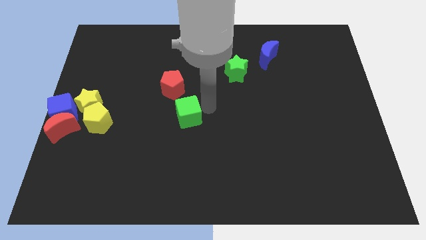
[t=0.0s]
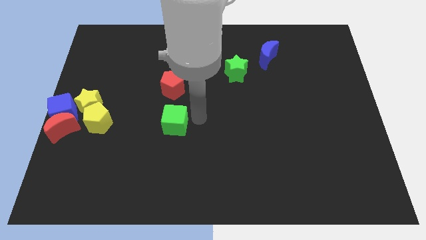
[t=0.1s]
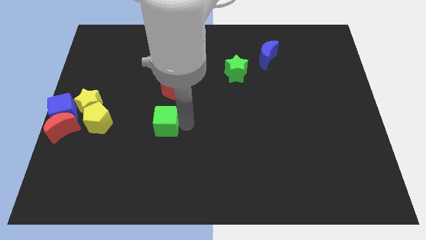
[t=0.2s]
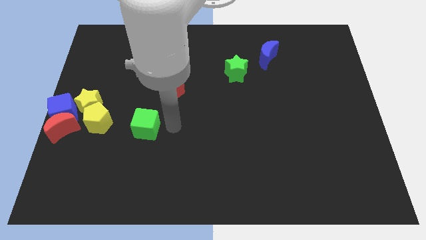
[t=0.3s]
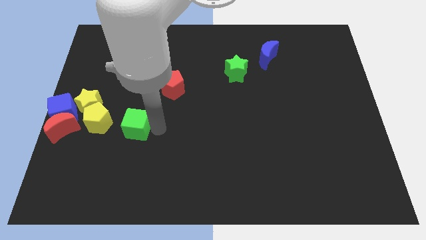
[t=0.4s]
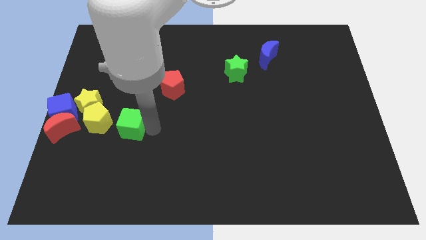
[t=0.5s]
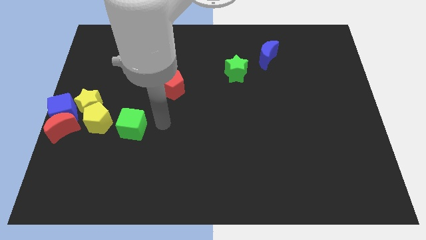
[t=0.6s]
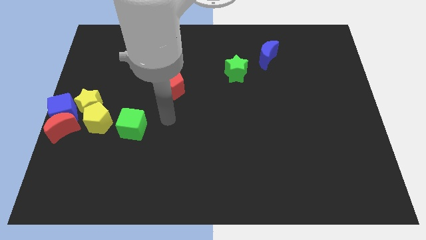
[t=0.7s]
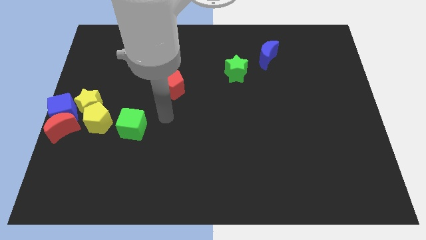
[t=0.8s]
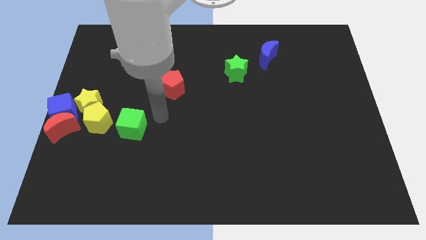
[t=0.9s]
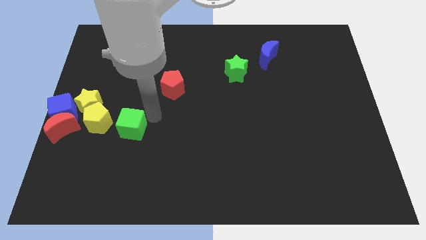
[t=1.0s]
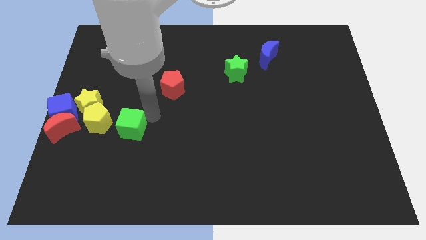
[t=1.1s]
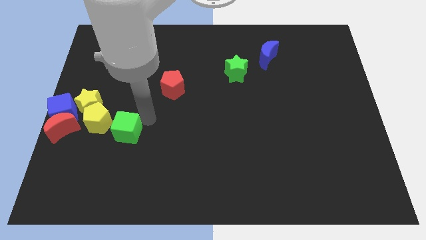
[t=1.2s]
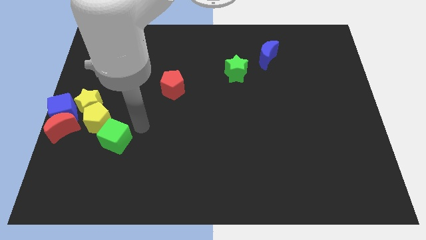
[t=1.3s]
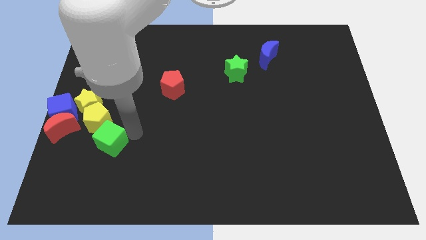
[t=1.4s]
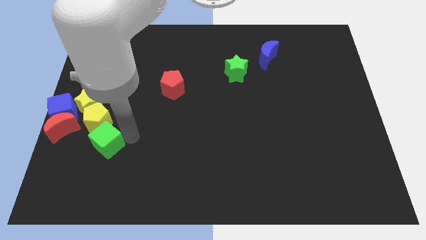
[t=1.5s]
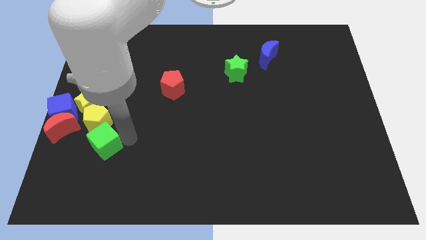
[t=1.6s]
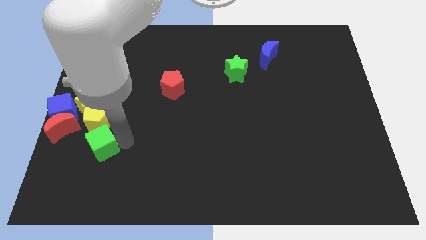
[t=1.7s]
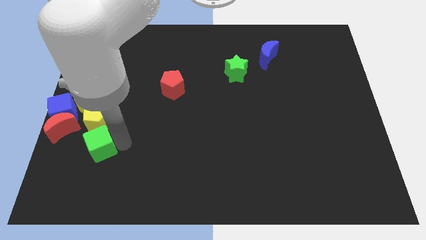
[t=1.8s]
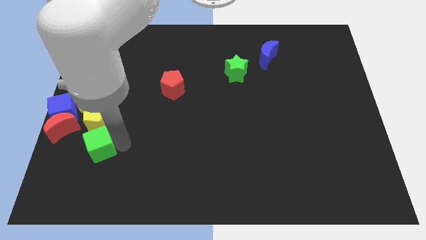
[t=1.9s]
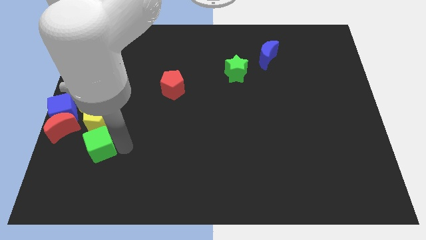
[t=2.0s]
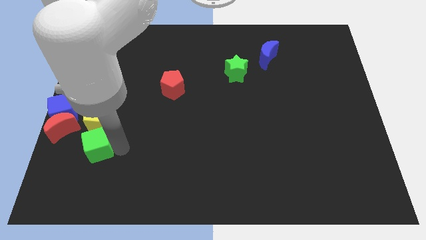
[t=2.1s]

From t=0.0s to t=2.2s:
push the green cube to the bottom of yellow pentagon

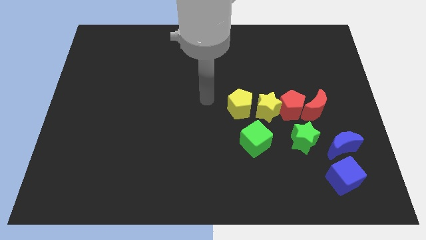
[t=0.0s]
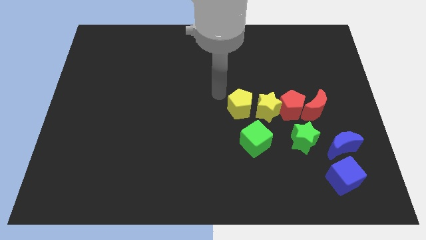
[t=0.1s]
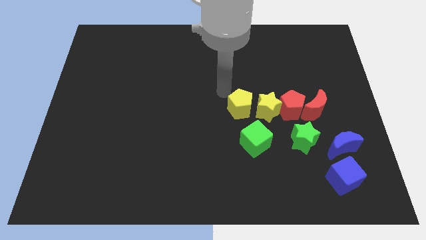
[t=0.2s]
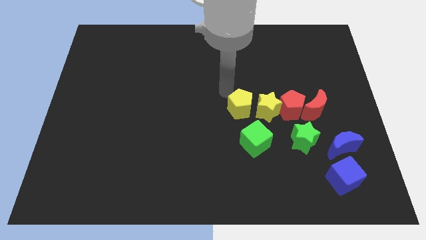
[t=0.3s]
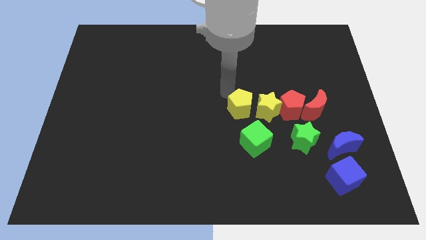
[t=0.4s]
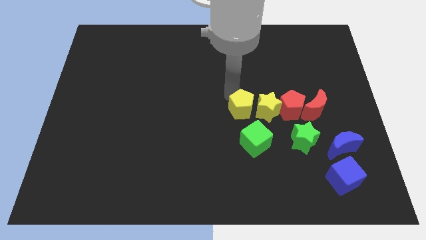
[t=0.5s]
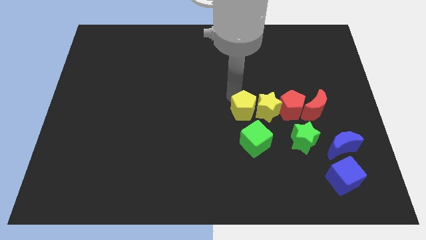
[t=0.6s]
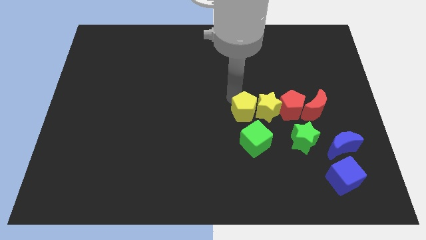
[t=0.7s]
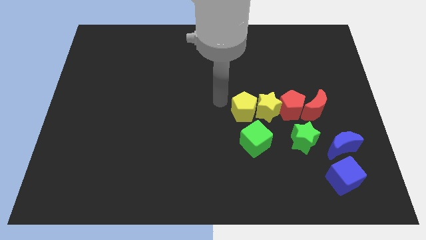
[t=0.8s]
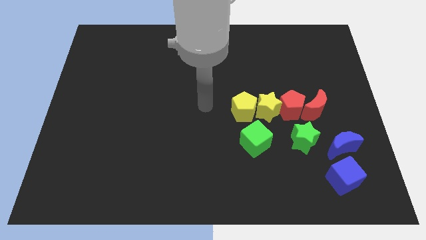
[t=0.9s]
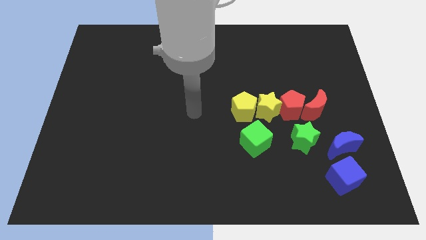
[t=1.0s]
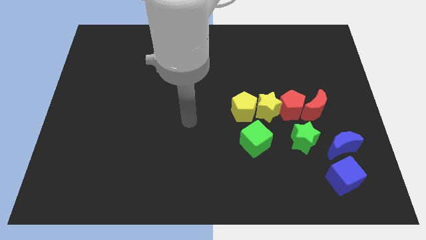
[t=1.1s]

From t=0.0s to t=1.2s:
put yellow pentagon adjacent to yellow star

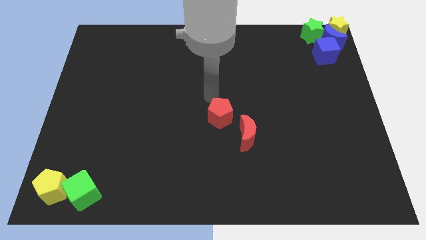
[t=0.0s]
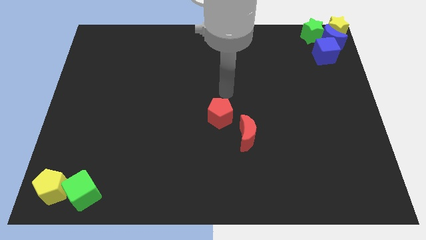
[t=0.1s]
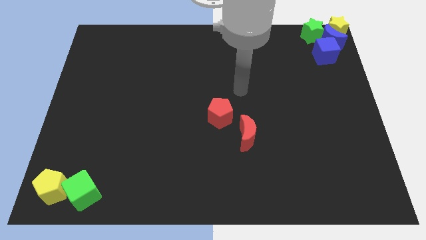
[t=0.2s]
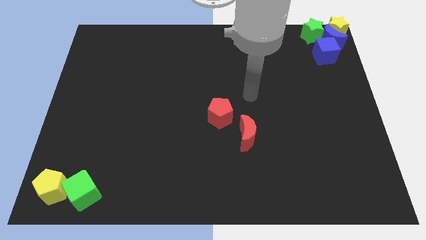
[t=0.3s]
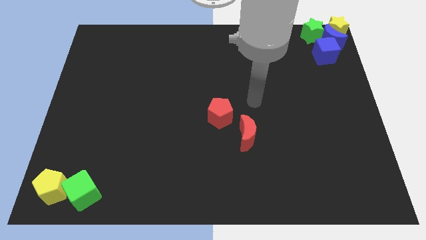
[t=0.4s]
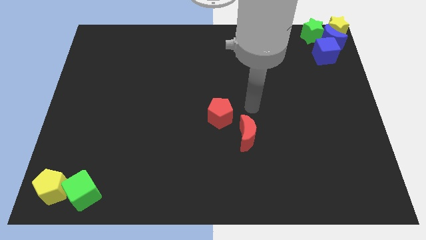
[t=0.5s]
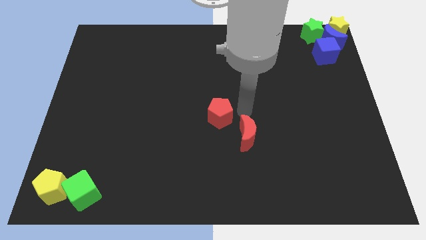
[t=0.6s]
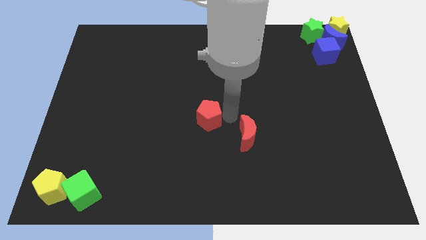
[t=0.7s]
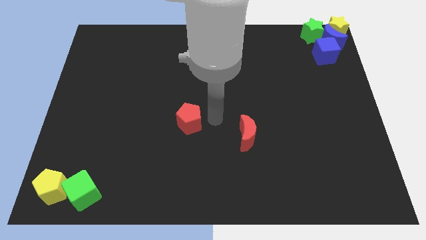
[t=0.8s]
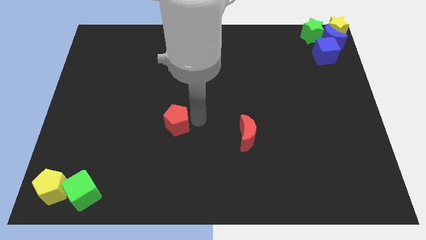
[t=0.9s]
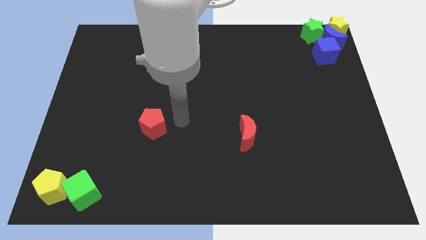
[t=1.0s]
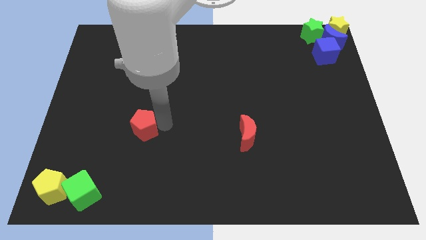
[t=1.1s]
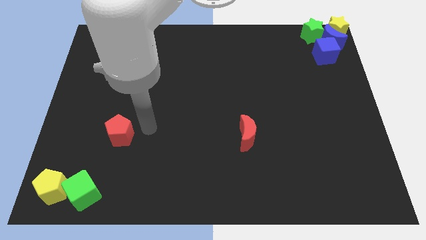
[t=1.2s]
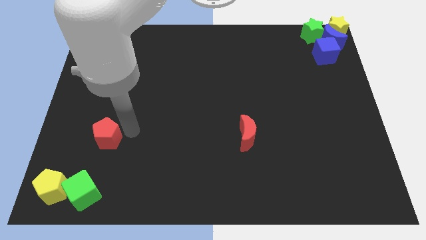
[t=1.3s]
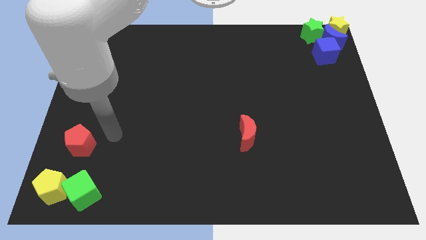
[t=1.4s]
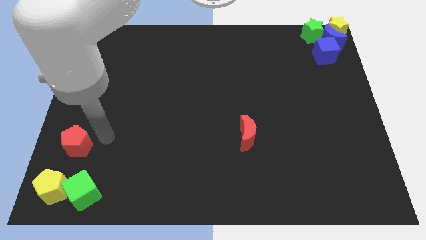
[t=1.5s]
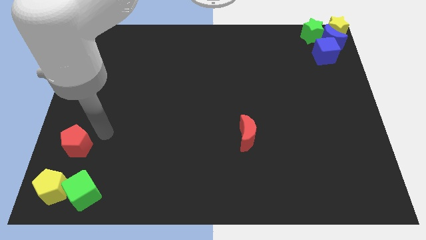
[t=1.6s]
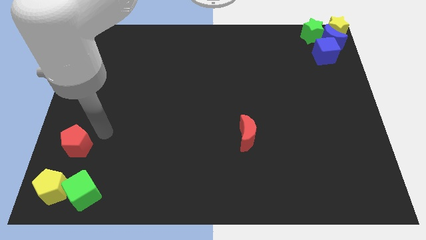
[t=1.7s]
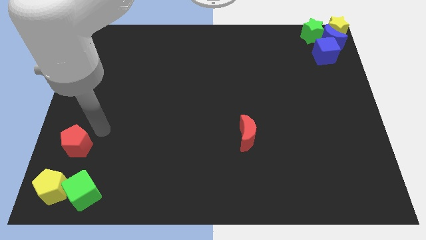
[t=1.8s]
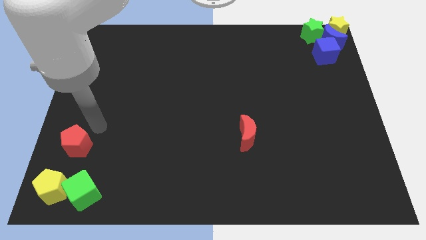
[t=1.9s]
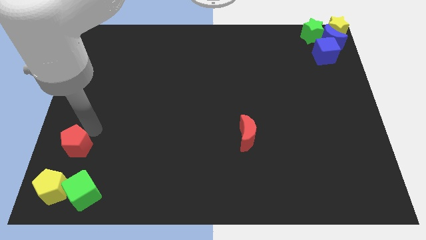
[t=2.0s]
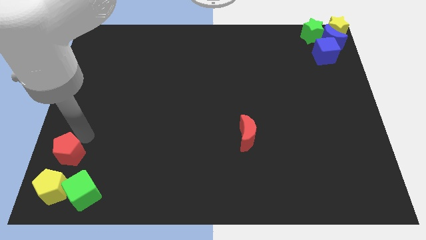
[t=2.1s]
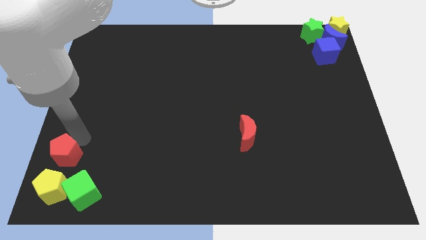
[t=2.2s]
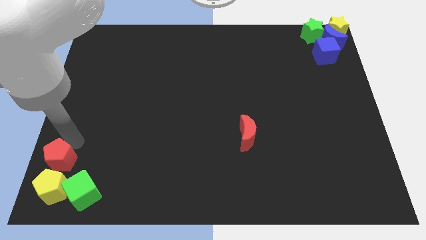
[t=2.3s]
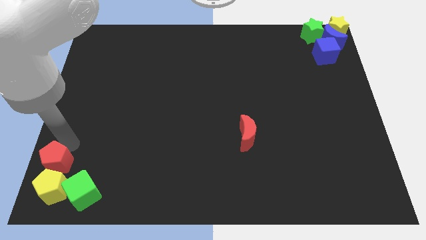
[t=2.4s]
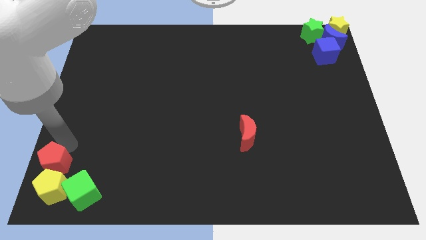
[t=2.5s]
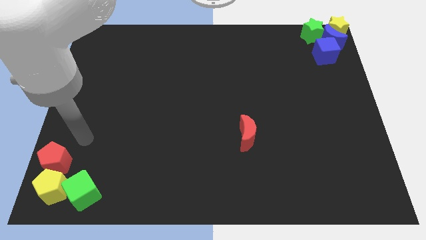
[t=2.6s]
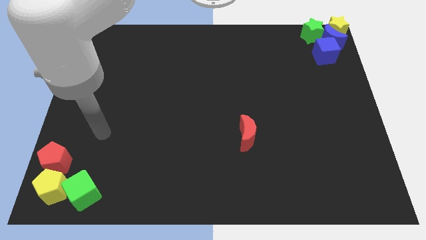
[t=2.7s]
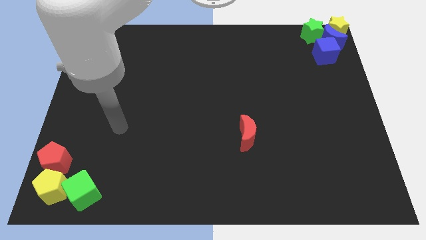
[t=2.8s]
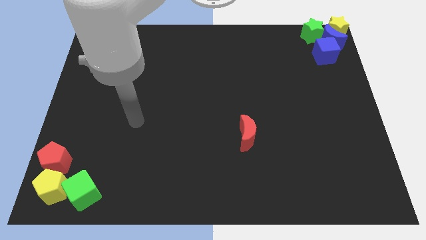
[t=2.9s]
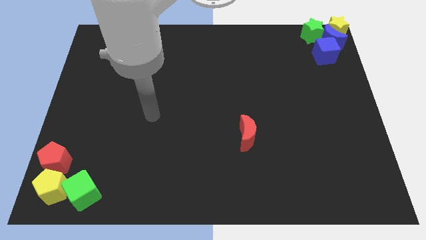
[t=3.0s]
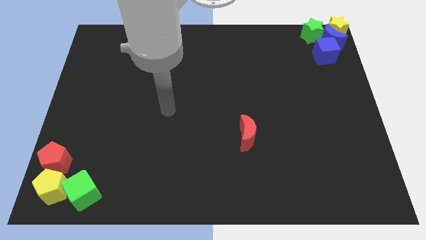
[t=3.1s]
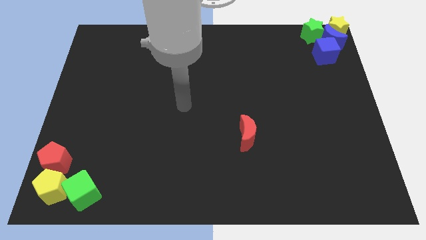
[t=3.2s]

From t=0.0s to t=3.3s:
move the red pentagon above into yellow pentagon

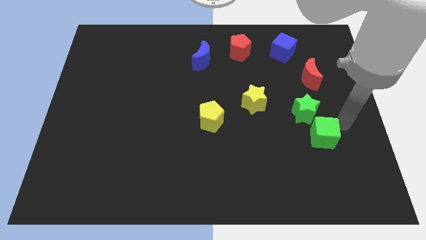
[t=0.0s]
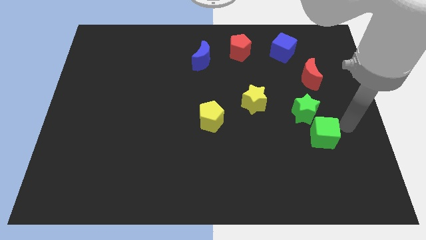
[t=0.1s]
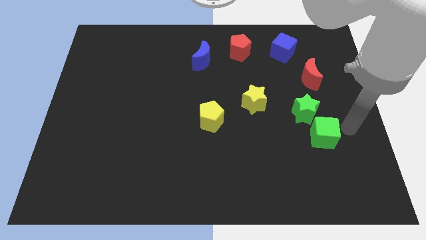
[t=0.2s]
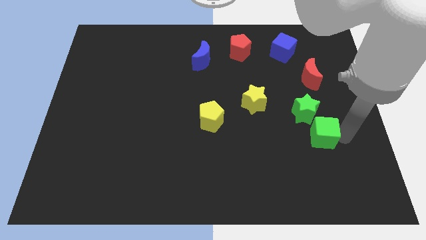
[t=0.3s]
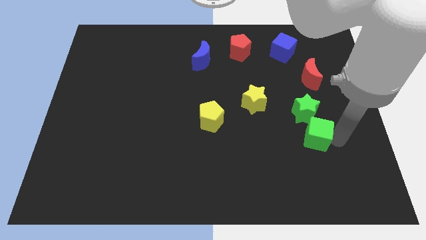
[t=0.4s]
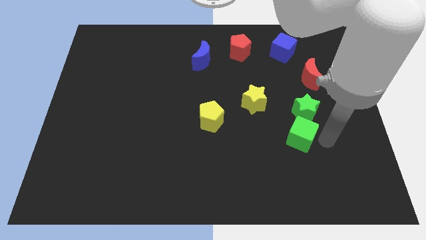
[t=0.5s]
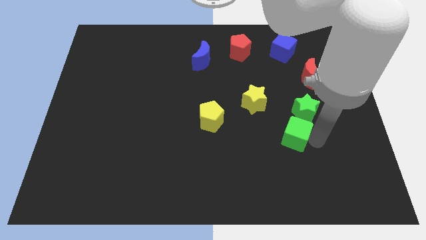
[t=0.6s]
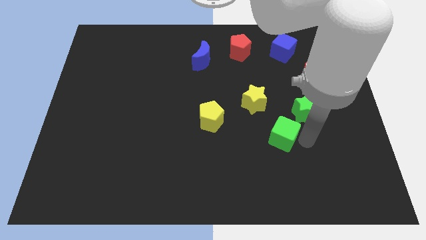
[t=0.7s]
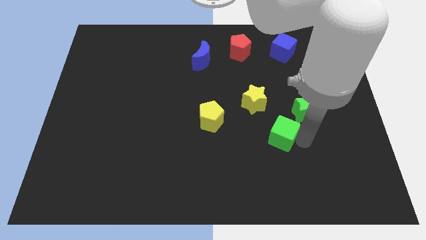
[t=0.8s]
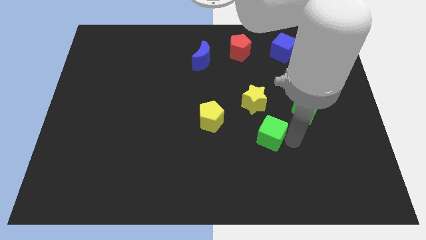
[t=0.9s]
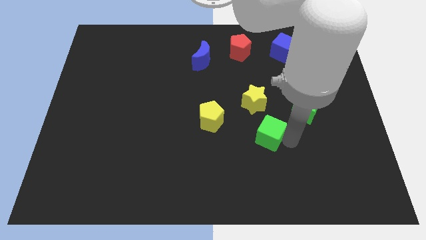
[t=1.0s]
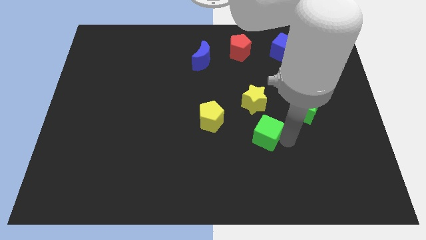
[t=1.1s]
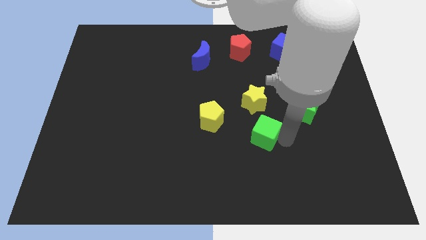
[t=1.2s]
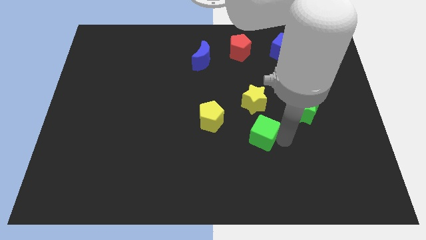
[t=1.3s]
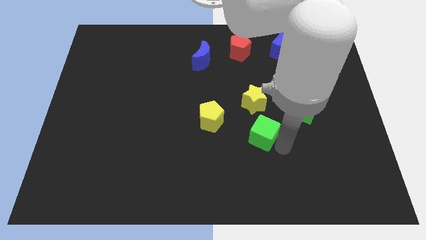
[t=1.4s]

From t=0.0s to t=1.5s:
place the green cube at the bottom of the yellow star

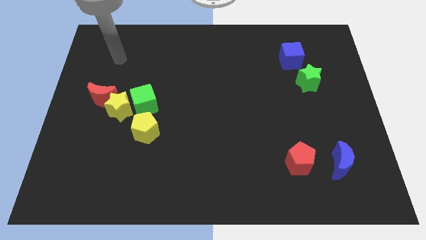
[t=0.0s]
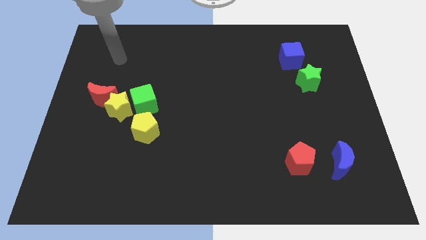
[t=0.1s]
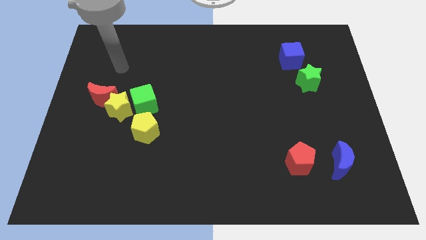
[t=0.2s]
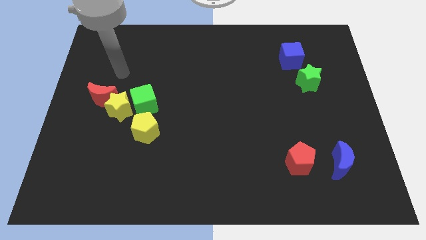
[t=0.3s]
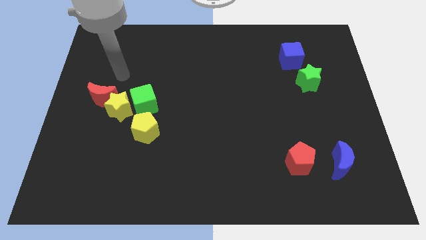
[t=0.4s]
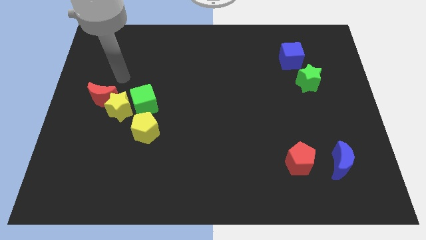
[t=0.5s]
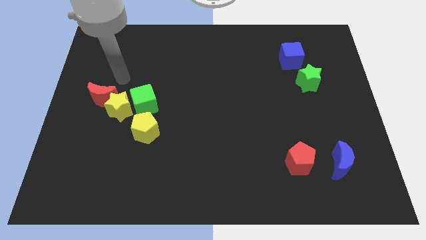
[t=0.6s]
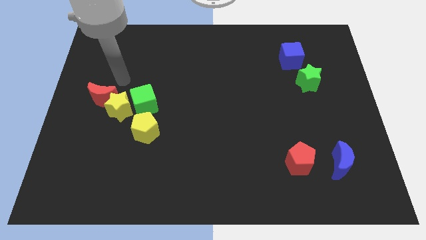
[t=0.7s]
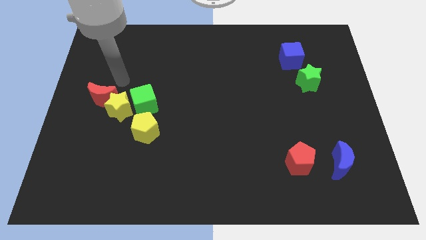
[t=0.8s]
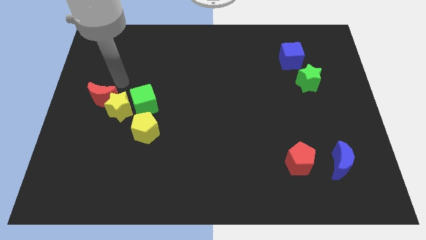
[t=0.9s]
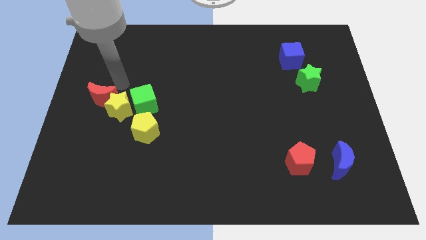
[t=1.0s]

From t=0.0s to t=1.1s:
move the arm towards the top of the yellow star
